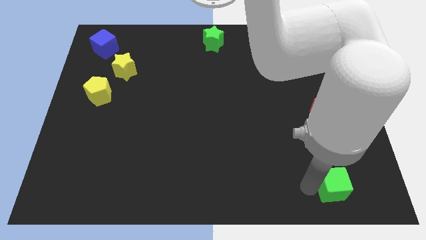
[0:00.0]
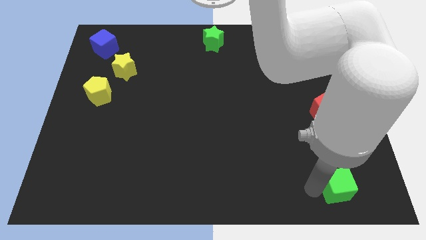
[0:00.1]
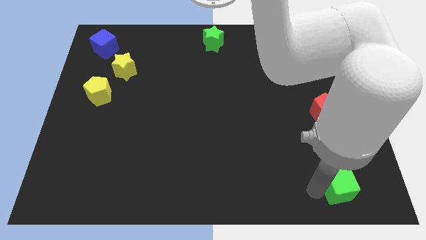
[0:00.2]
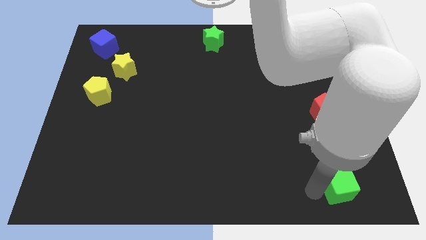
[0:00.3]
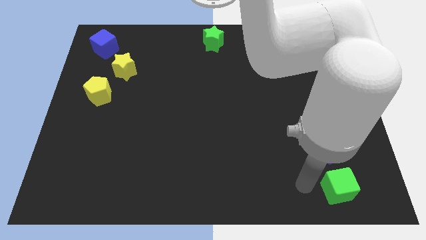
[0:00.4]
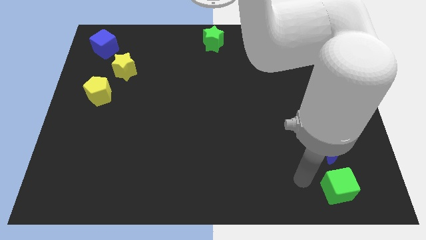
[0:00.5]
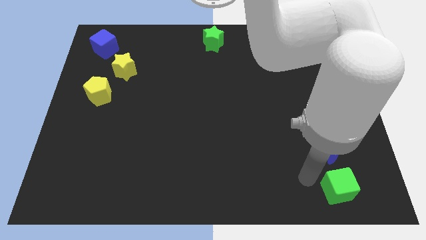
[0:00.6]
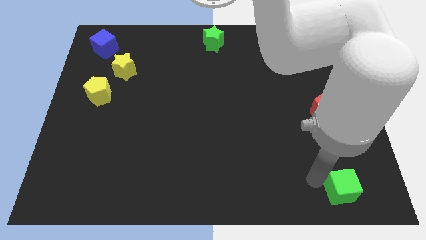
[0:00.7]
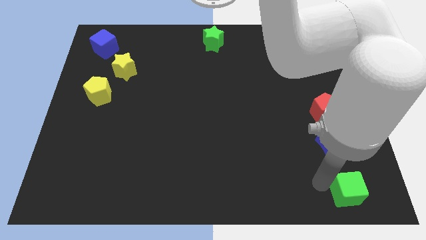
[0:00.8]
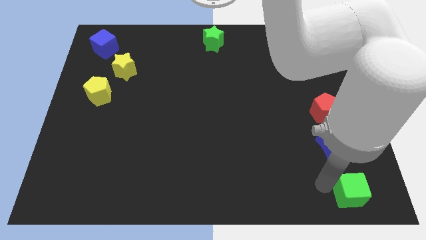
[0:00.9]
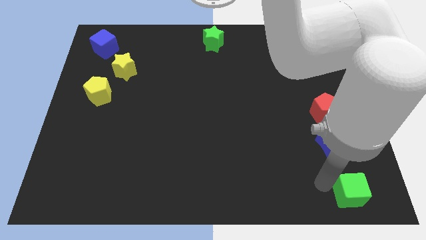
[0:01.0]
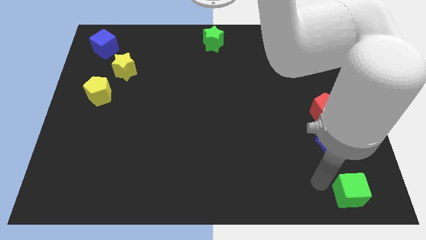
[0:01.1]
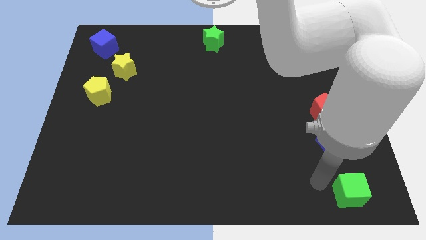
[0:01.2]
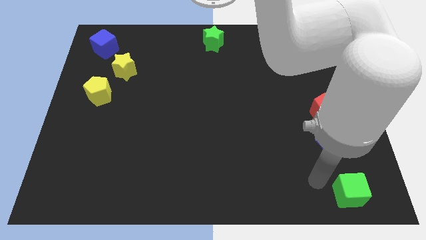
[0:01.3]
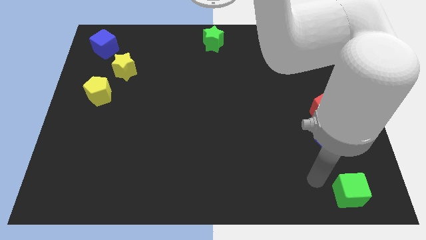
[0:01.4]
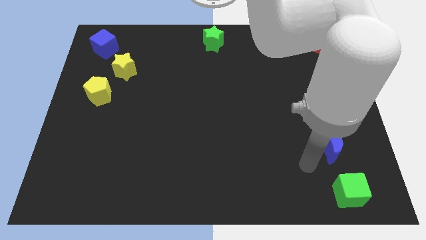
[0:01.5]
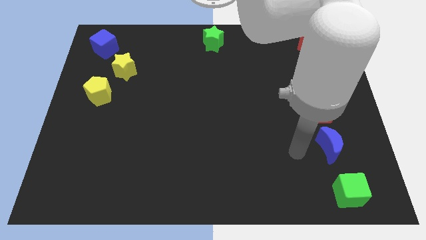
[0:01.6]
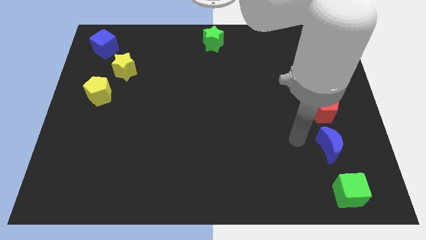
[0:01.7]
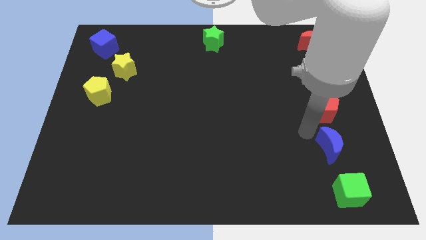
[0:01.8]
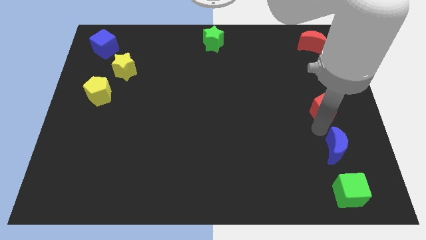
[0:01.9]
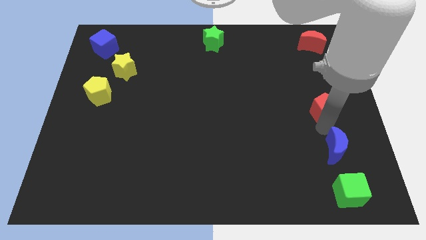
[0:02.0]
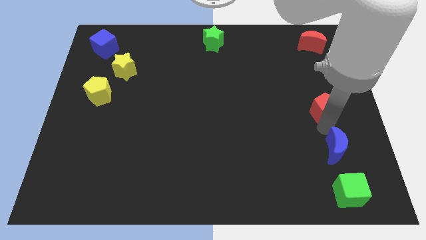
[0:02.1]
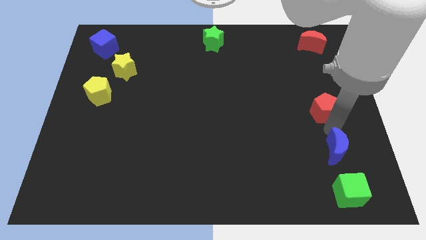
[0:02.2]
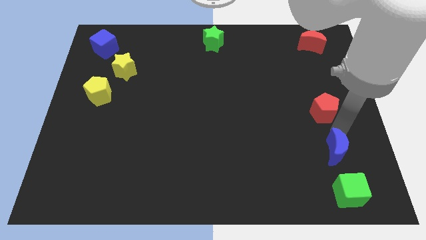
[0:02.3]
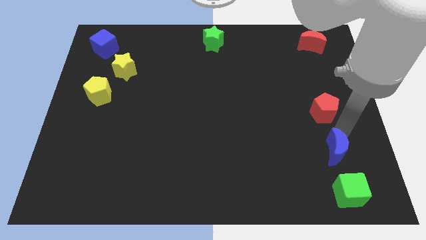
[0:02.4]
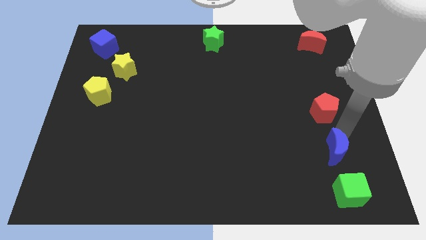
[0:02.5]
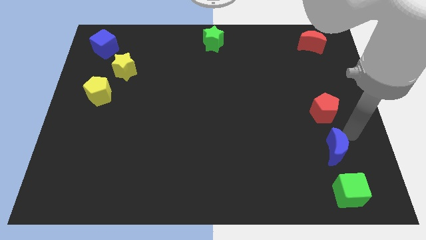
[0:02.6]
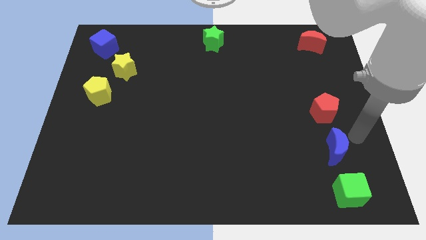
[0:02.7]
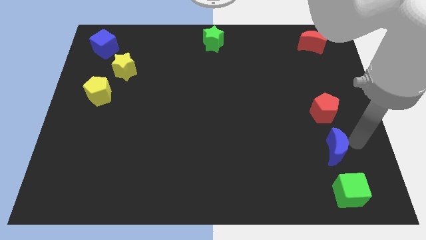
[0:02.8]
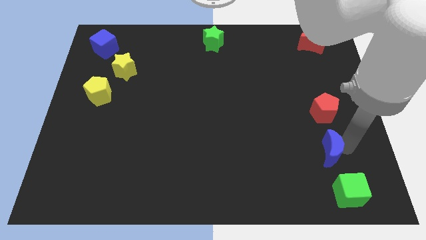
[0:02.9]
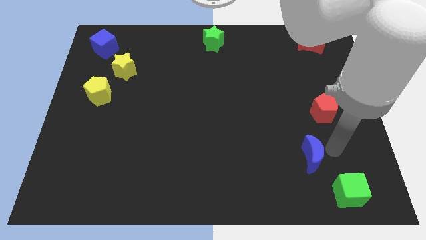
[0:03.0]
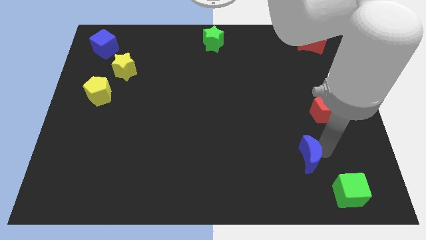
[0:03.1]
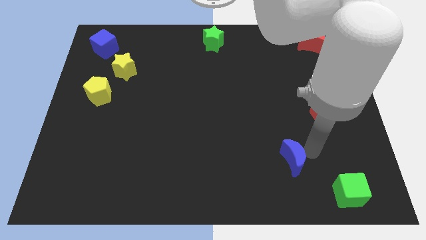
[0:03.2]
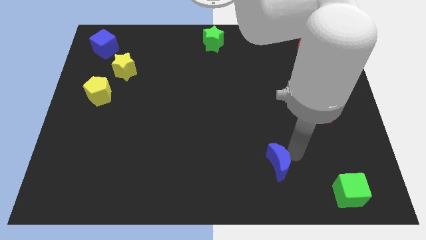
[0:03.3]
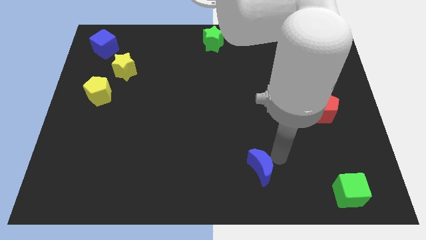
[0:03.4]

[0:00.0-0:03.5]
drag blue moon towards left side of the board

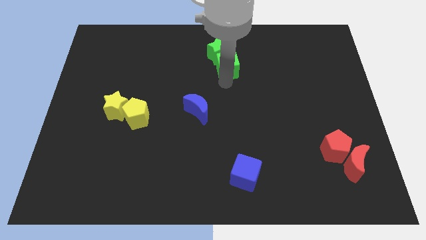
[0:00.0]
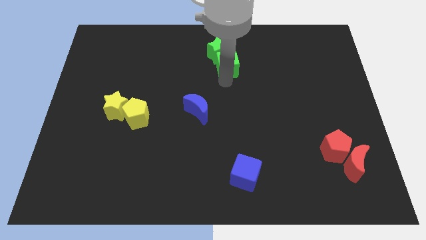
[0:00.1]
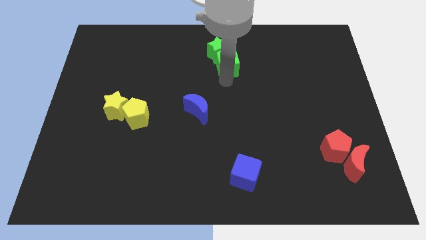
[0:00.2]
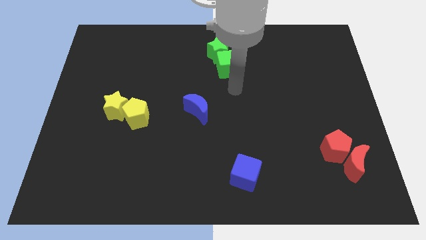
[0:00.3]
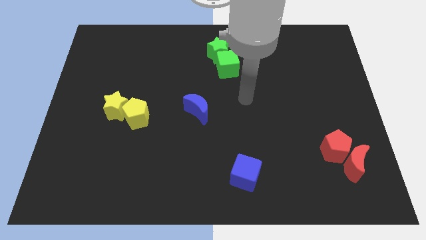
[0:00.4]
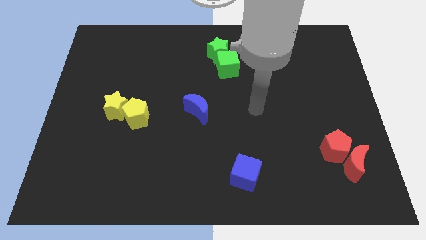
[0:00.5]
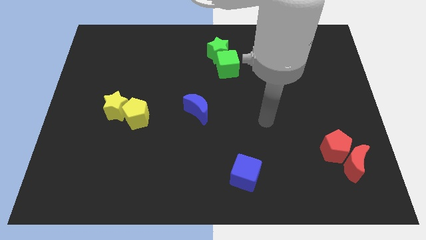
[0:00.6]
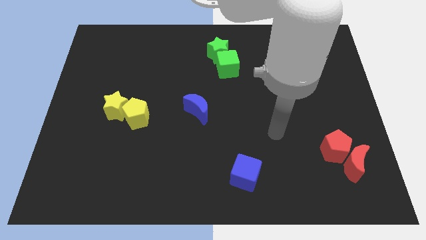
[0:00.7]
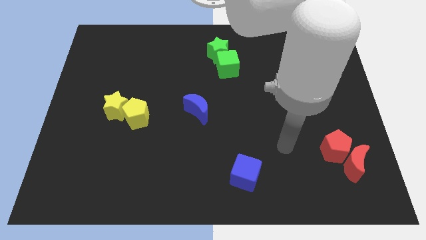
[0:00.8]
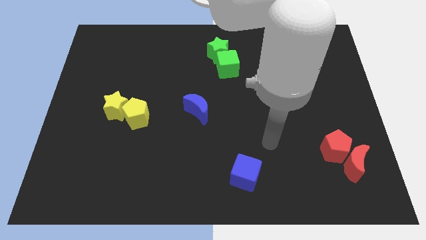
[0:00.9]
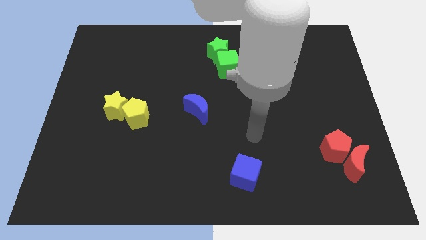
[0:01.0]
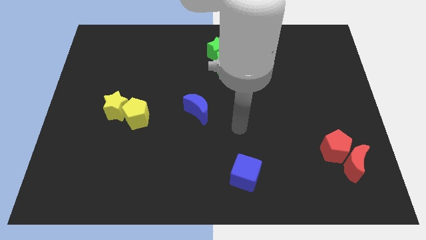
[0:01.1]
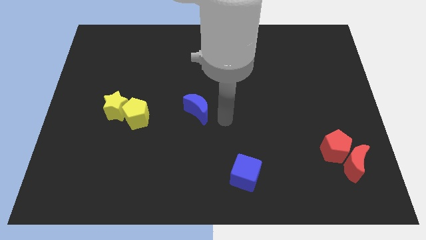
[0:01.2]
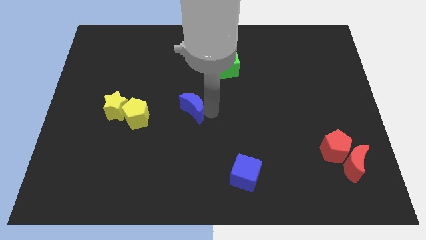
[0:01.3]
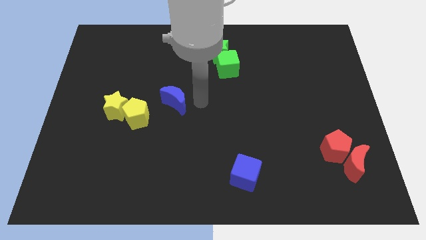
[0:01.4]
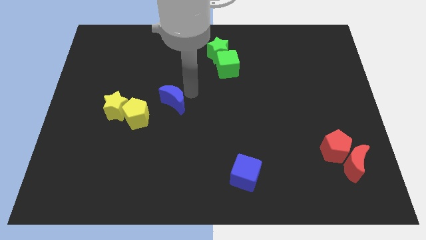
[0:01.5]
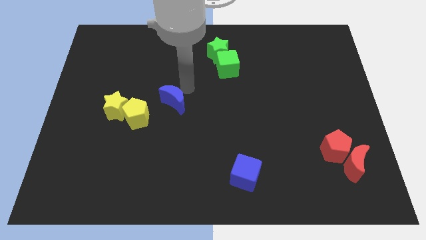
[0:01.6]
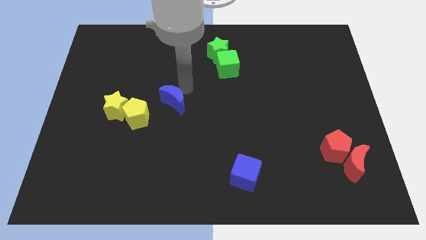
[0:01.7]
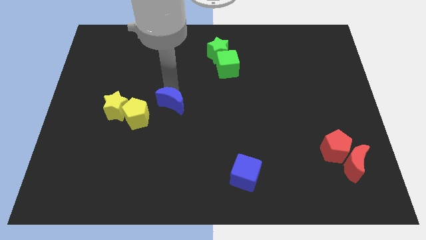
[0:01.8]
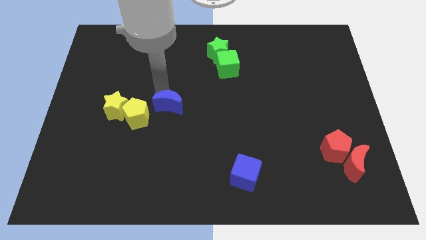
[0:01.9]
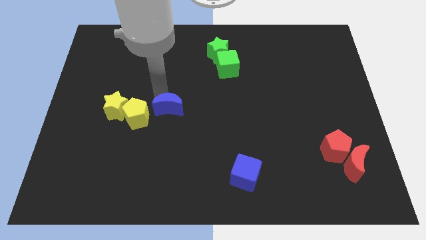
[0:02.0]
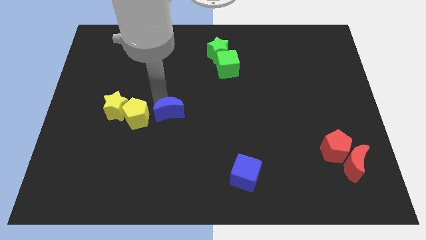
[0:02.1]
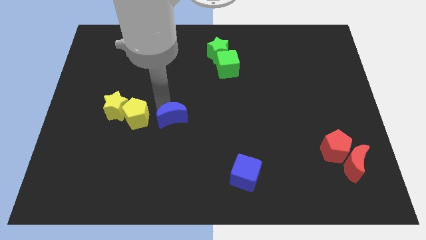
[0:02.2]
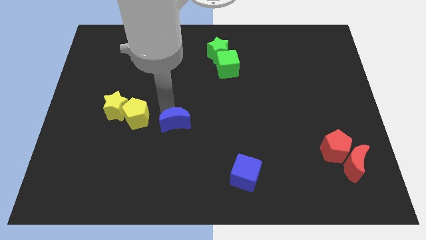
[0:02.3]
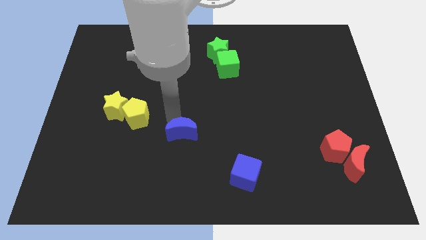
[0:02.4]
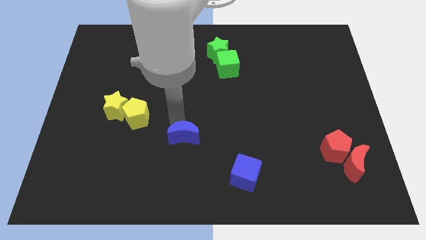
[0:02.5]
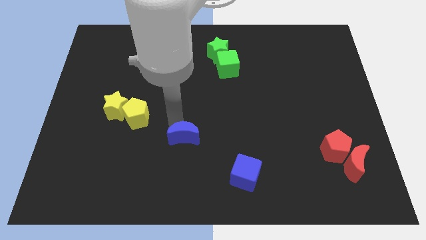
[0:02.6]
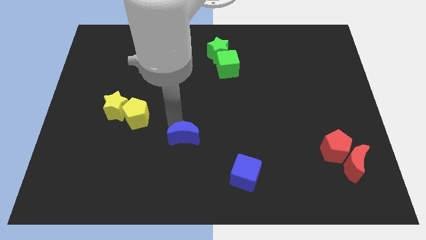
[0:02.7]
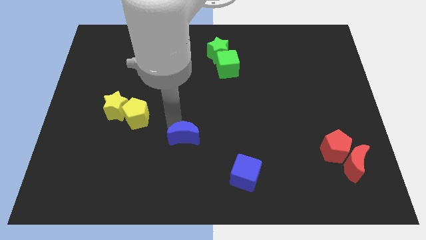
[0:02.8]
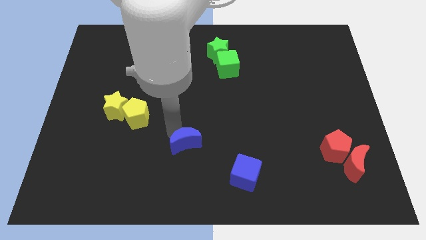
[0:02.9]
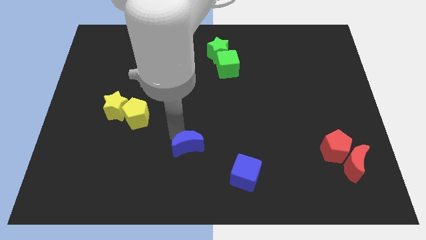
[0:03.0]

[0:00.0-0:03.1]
push the blue crescent diagonally left to the blue cube

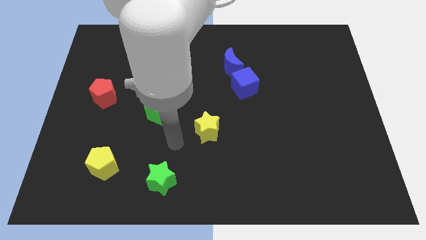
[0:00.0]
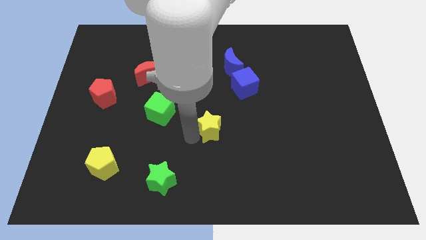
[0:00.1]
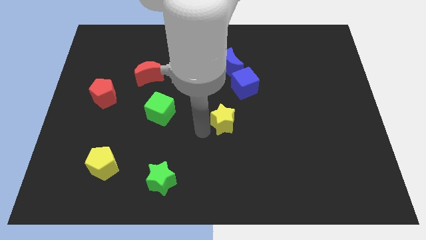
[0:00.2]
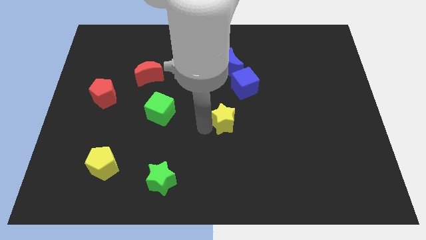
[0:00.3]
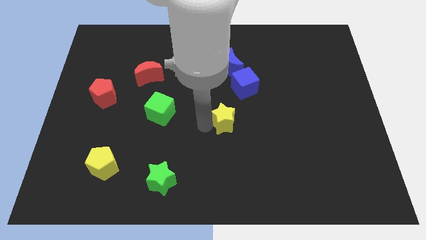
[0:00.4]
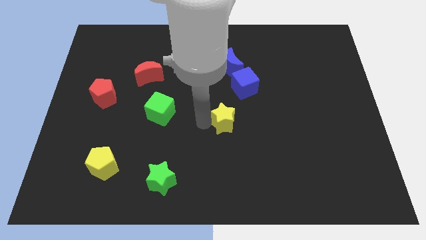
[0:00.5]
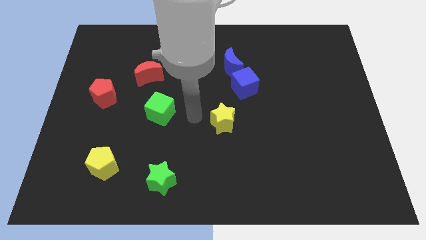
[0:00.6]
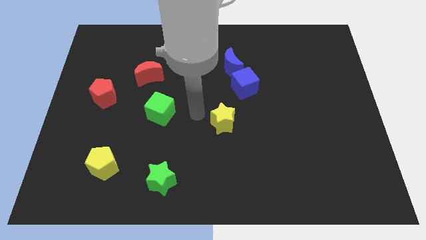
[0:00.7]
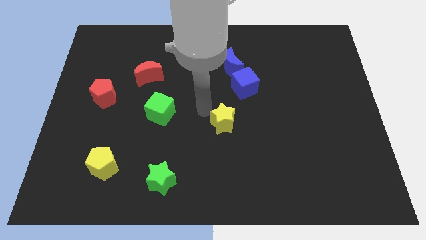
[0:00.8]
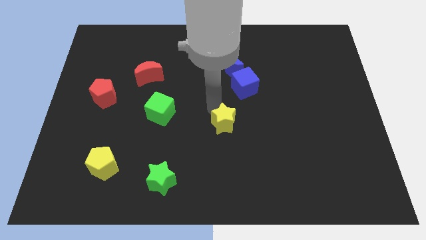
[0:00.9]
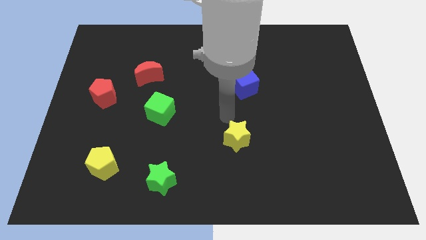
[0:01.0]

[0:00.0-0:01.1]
slightly touch the yellow star

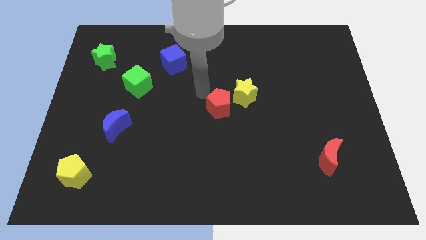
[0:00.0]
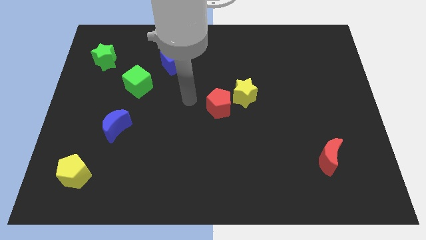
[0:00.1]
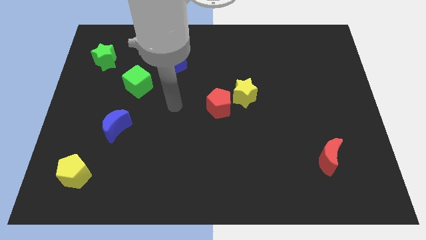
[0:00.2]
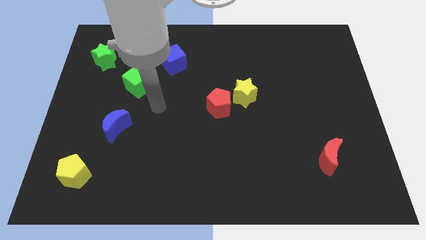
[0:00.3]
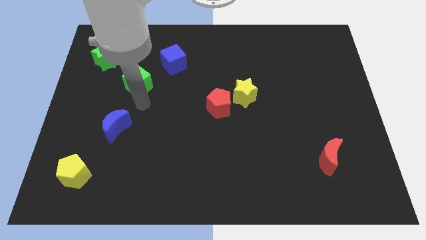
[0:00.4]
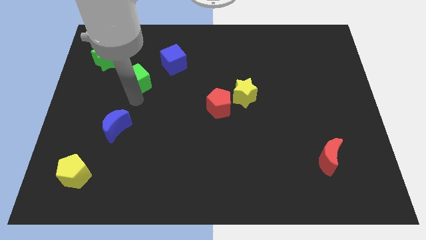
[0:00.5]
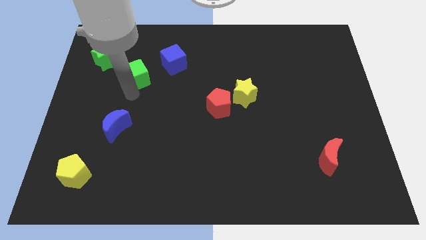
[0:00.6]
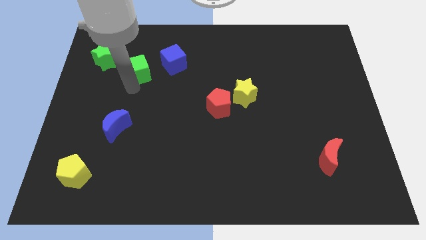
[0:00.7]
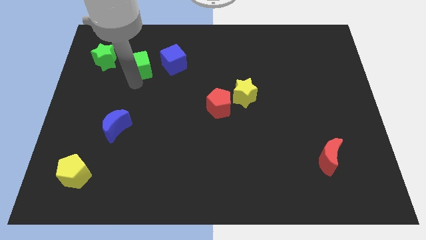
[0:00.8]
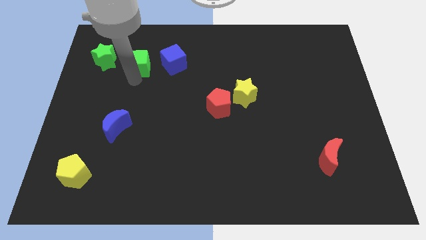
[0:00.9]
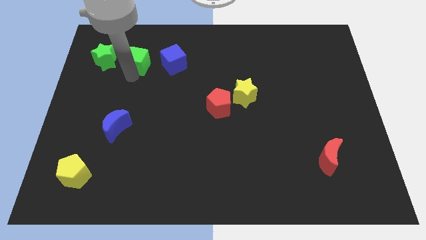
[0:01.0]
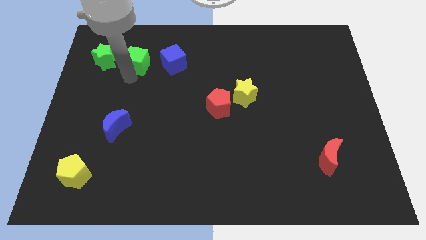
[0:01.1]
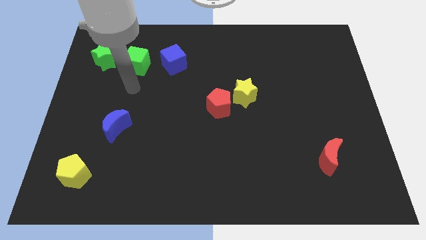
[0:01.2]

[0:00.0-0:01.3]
put the green cube in between the blue cube and green star
